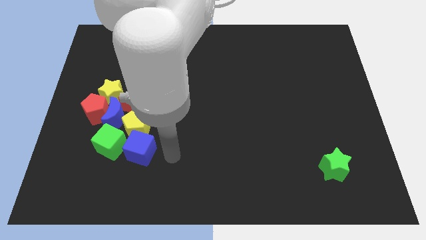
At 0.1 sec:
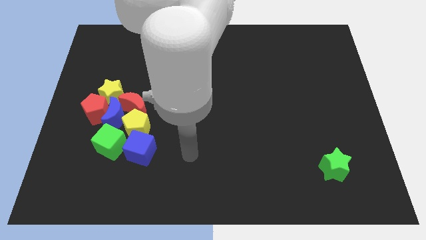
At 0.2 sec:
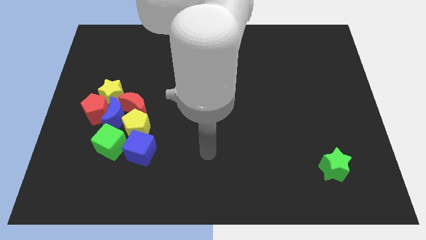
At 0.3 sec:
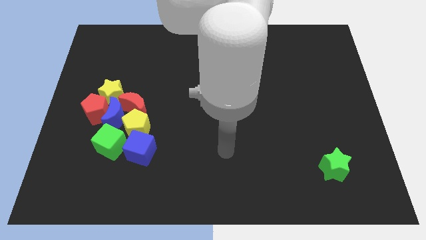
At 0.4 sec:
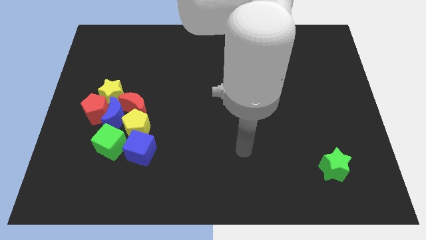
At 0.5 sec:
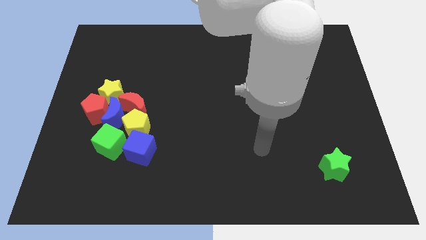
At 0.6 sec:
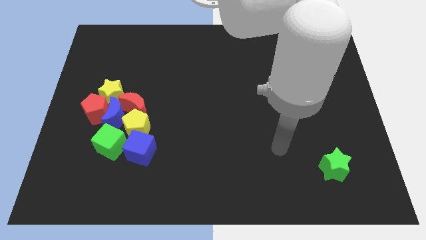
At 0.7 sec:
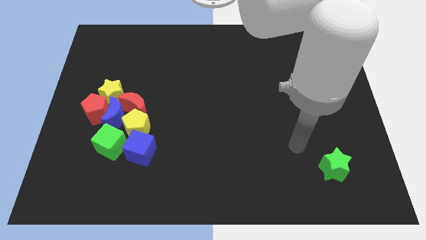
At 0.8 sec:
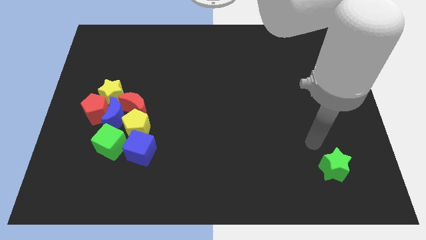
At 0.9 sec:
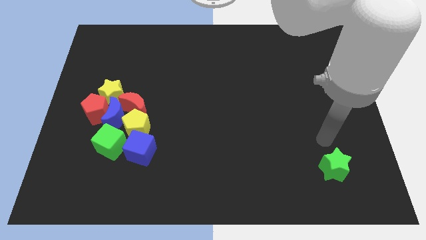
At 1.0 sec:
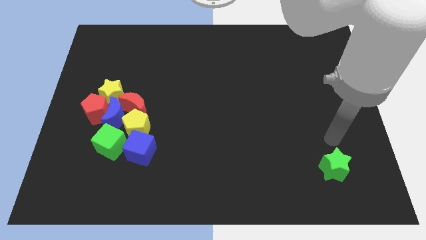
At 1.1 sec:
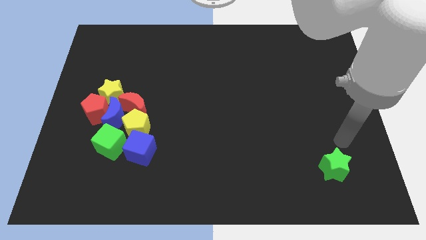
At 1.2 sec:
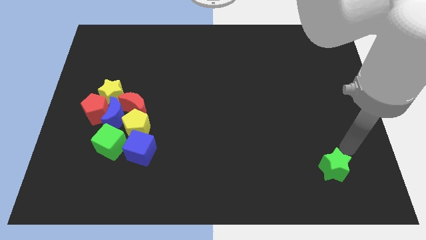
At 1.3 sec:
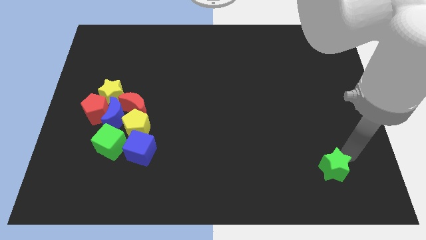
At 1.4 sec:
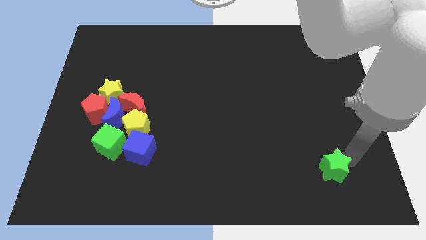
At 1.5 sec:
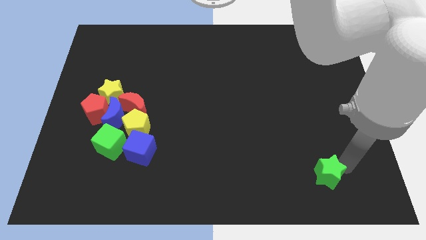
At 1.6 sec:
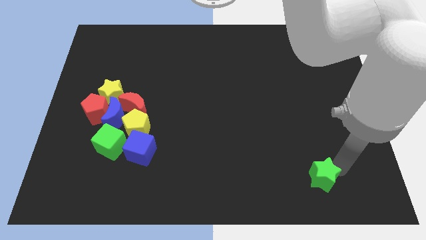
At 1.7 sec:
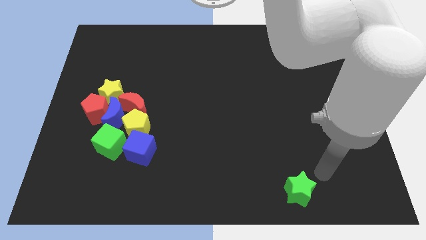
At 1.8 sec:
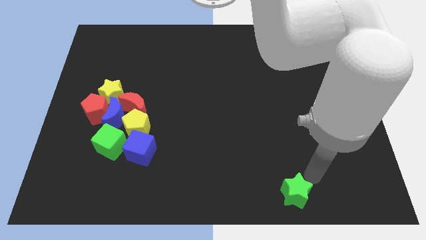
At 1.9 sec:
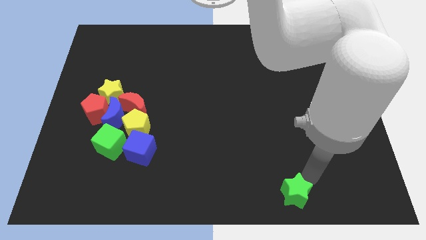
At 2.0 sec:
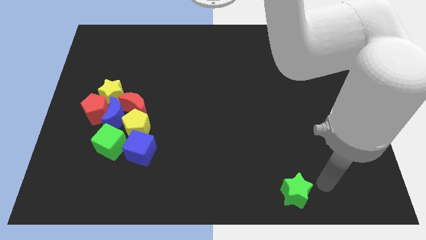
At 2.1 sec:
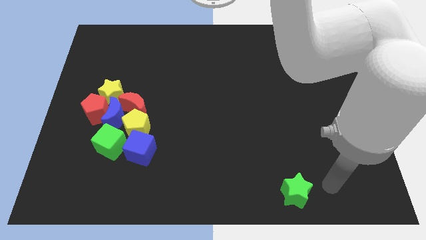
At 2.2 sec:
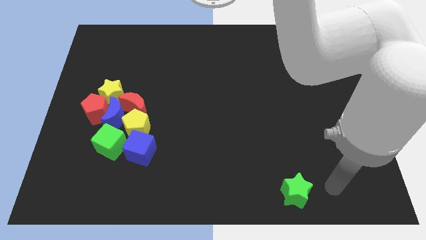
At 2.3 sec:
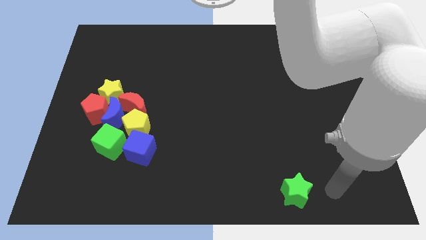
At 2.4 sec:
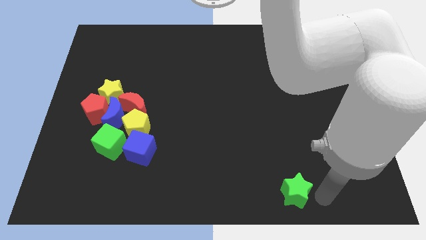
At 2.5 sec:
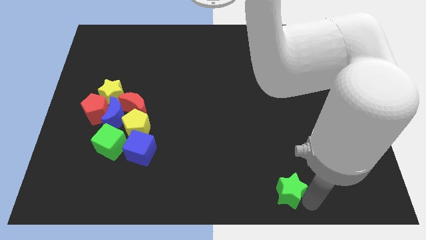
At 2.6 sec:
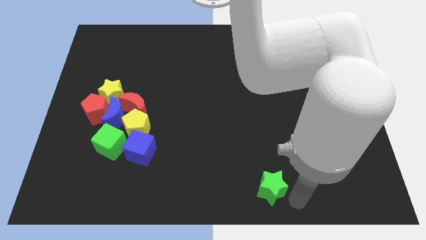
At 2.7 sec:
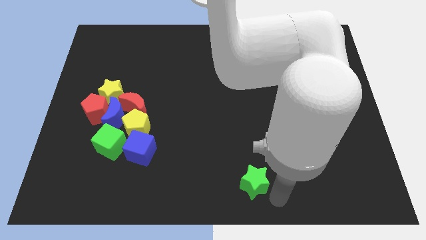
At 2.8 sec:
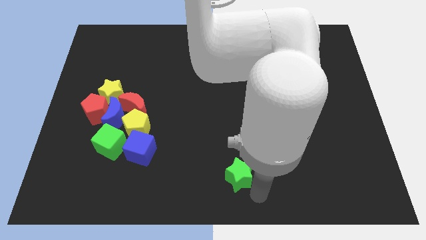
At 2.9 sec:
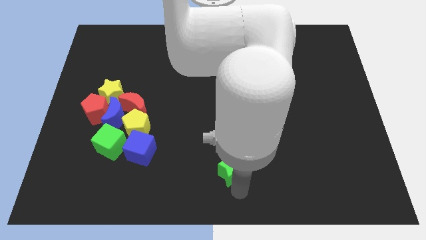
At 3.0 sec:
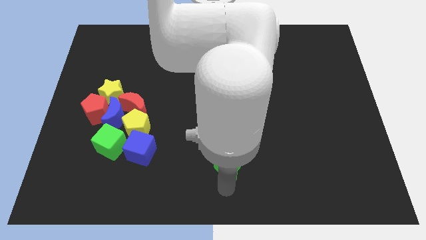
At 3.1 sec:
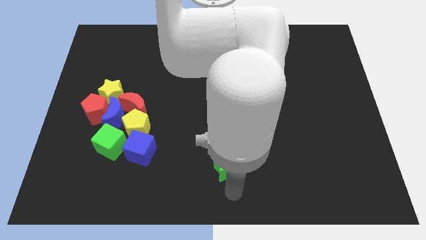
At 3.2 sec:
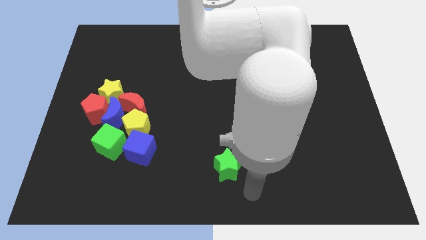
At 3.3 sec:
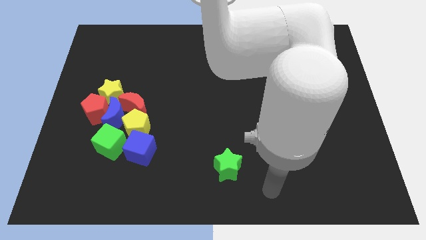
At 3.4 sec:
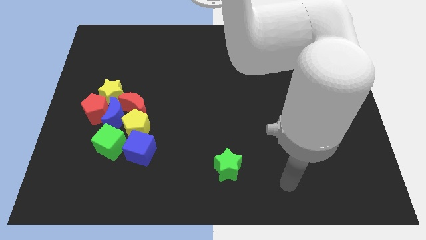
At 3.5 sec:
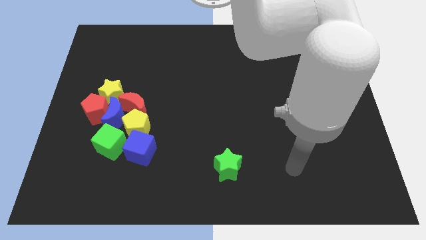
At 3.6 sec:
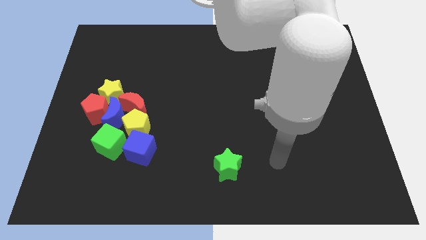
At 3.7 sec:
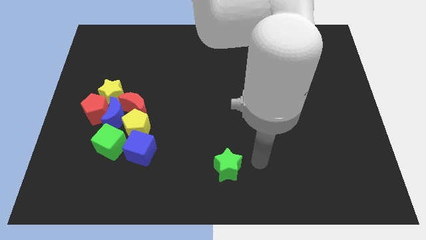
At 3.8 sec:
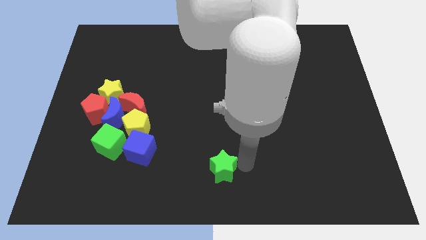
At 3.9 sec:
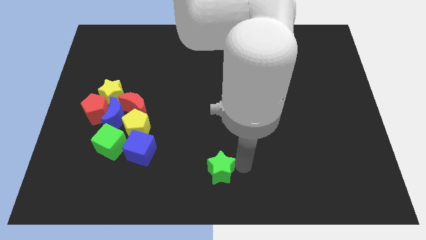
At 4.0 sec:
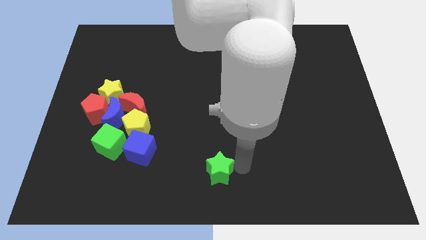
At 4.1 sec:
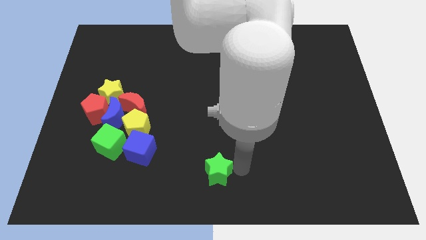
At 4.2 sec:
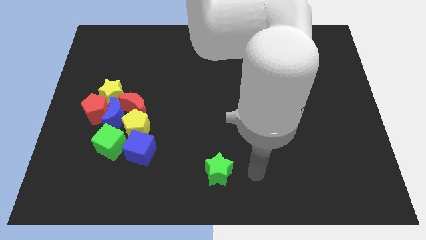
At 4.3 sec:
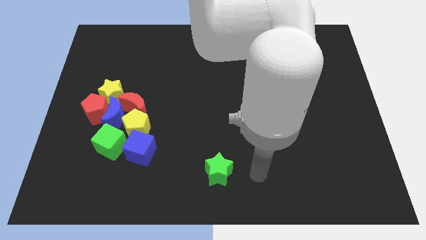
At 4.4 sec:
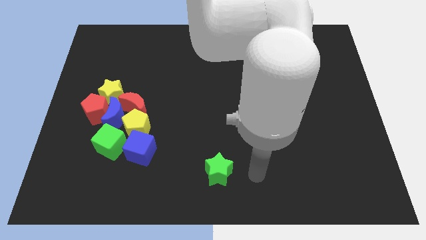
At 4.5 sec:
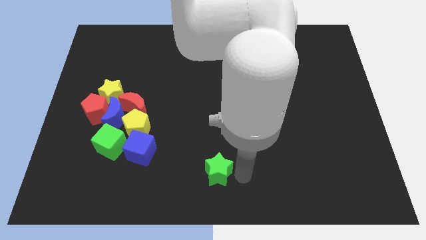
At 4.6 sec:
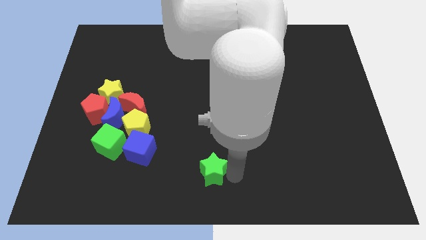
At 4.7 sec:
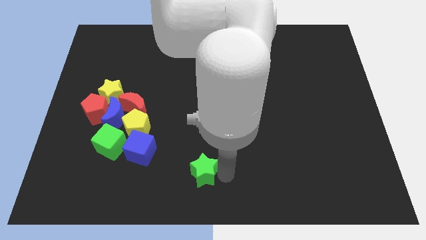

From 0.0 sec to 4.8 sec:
slide the green star towards the group of blocks

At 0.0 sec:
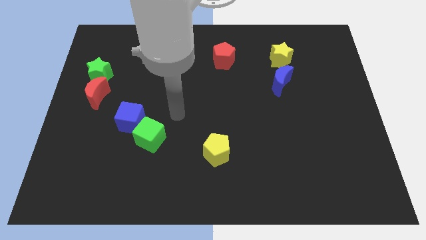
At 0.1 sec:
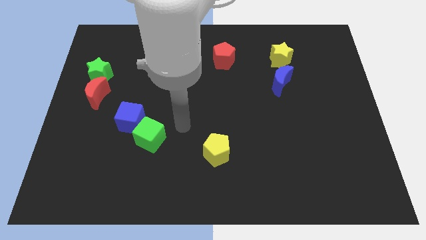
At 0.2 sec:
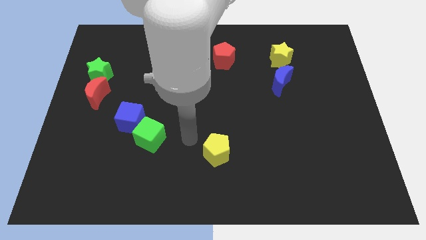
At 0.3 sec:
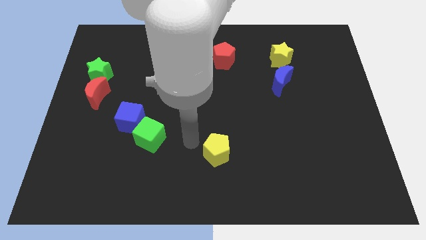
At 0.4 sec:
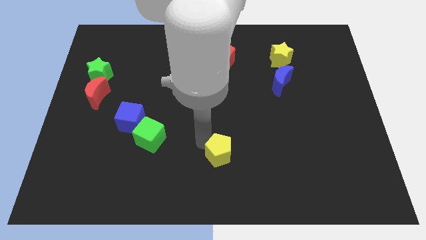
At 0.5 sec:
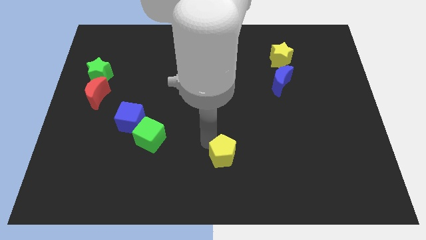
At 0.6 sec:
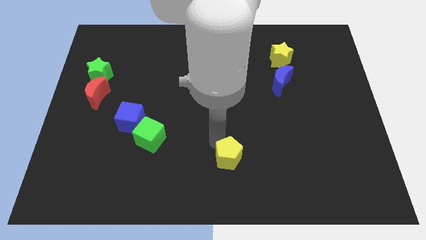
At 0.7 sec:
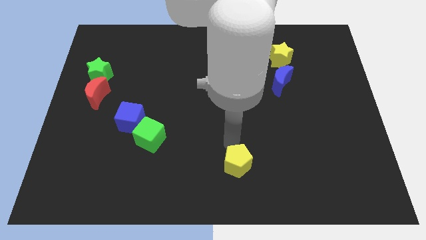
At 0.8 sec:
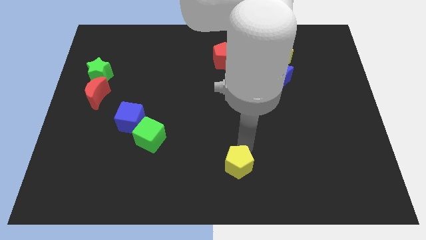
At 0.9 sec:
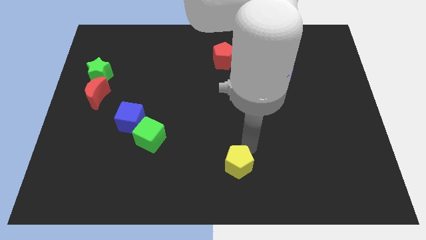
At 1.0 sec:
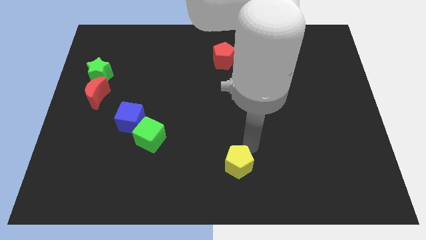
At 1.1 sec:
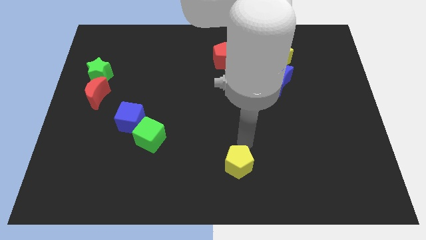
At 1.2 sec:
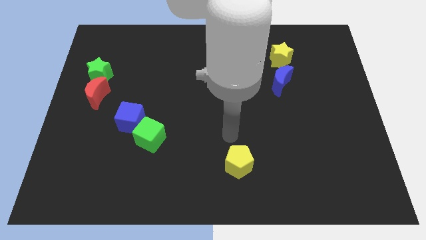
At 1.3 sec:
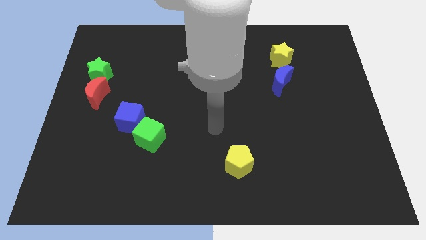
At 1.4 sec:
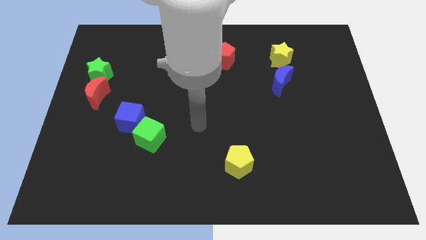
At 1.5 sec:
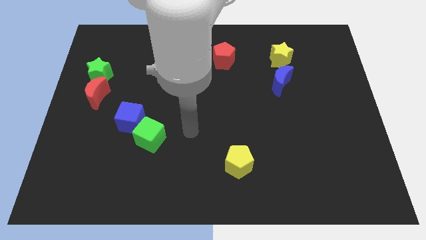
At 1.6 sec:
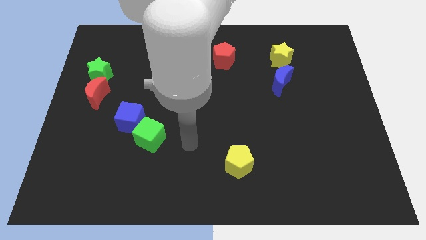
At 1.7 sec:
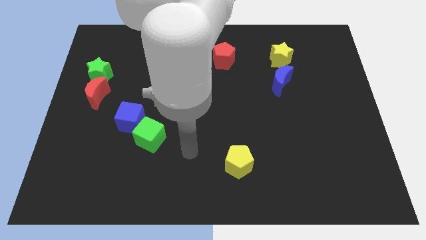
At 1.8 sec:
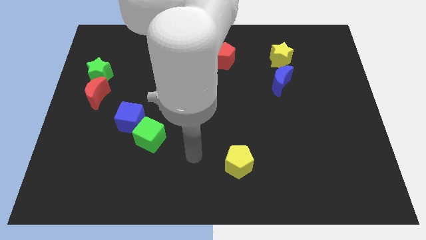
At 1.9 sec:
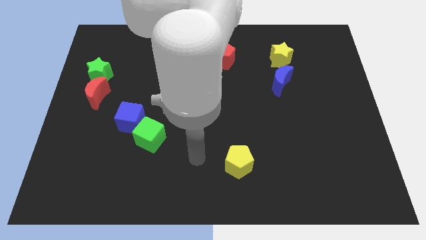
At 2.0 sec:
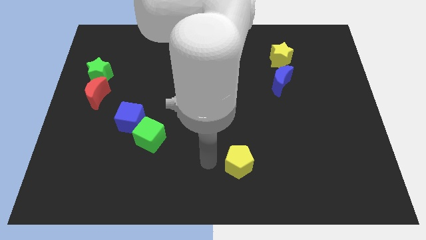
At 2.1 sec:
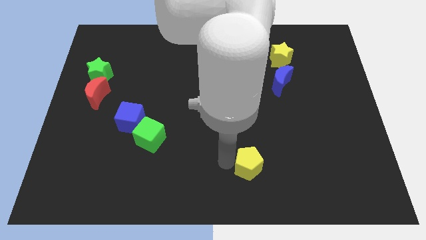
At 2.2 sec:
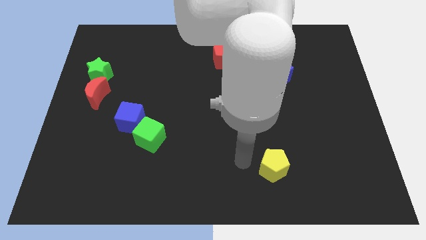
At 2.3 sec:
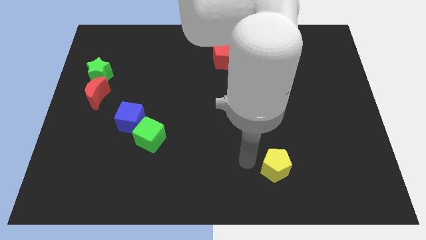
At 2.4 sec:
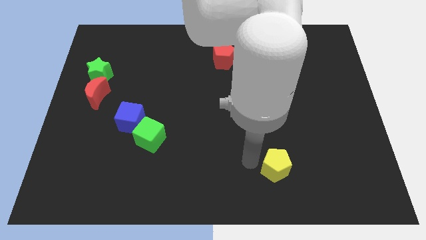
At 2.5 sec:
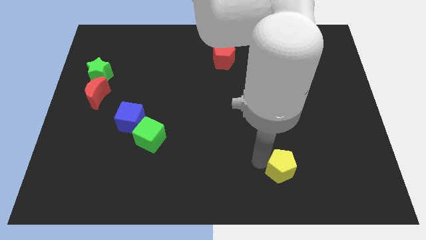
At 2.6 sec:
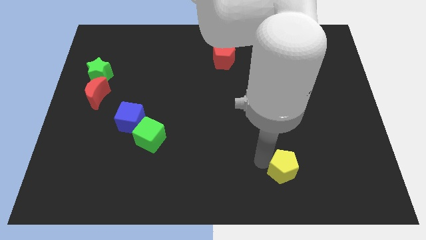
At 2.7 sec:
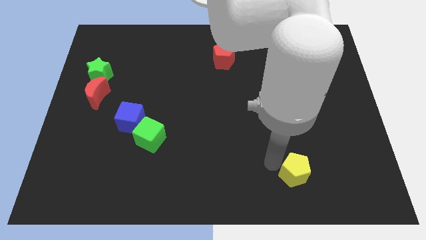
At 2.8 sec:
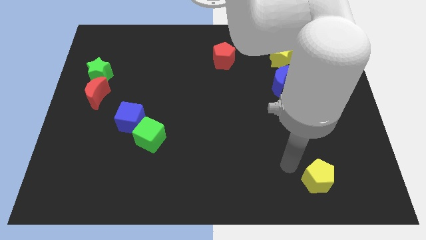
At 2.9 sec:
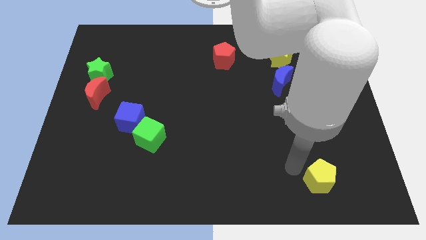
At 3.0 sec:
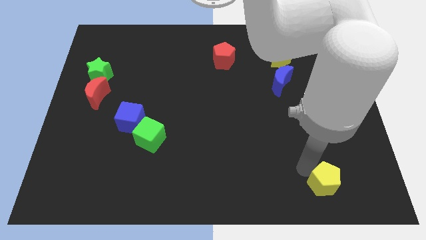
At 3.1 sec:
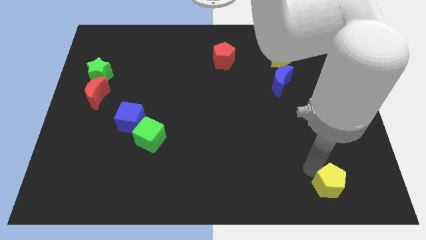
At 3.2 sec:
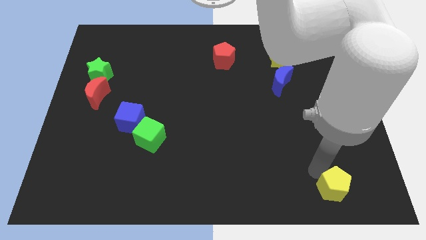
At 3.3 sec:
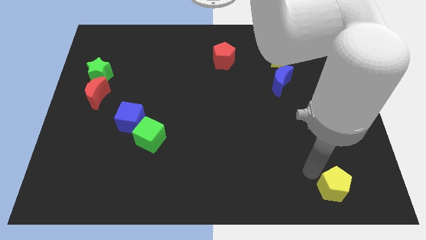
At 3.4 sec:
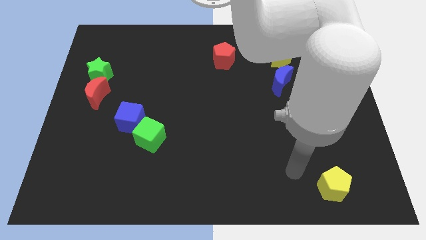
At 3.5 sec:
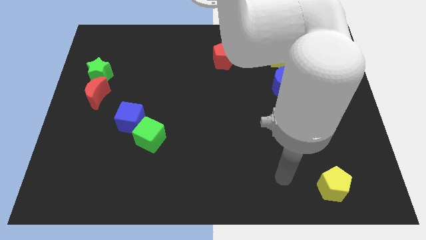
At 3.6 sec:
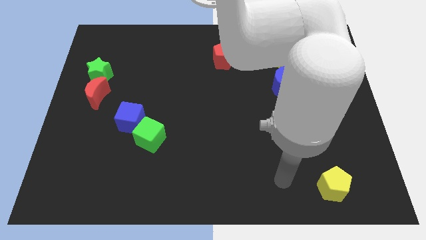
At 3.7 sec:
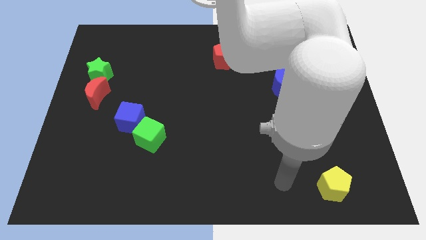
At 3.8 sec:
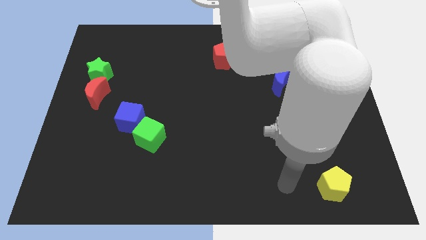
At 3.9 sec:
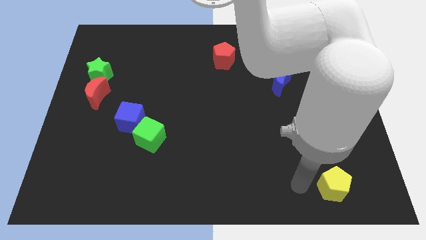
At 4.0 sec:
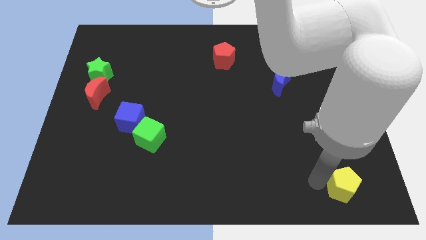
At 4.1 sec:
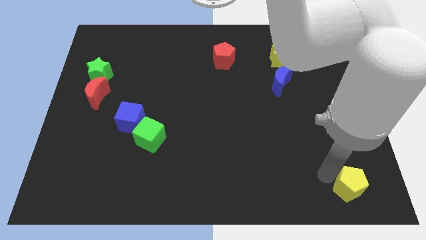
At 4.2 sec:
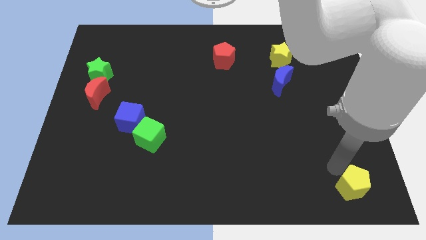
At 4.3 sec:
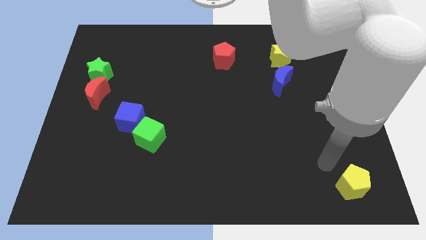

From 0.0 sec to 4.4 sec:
move the yellow pentagon to the right bottom
